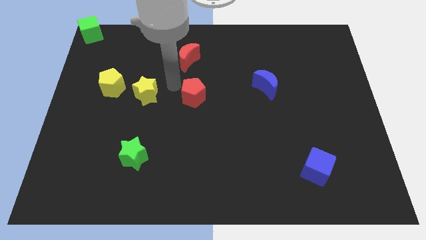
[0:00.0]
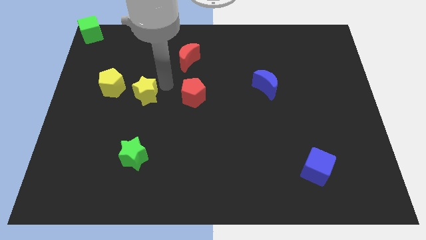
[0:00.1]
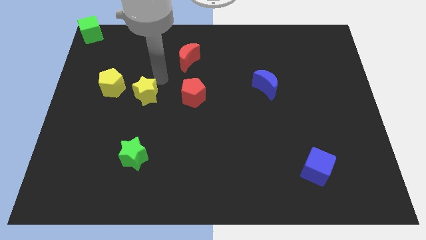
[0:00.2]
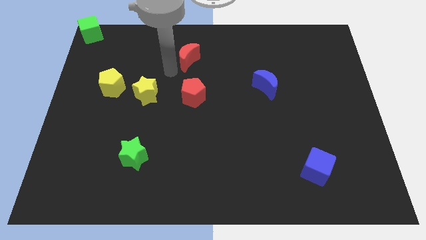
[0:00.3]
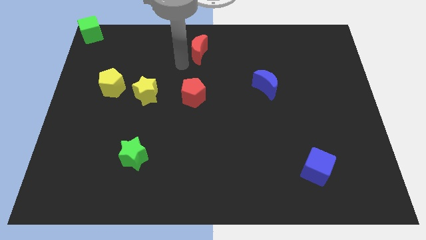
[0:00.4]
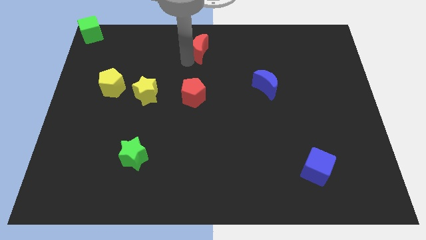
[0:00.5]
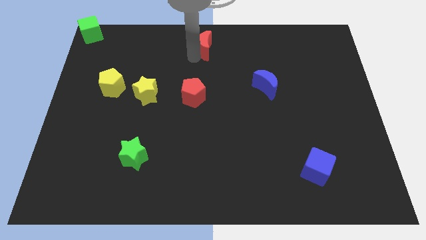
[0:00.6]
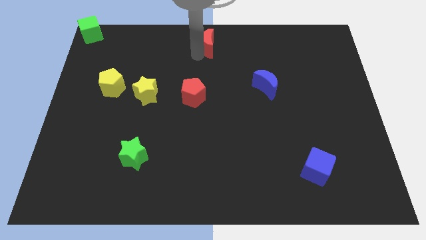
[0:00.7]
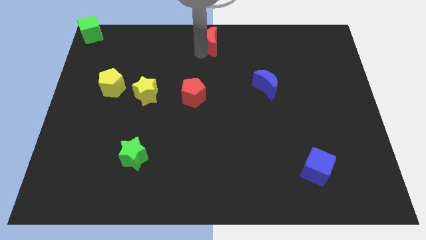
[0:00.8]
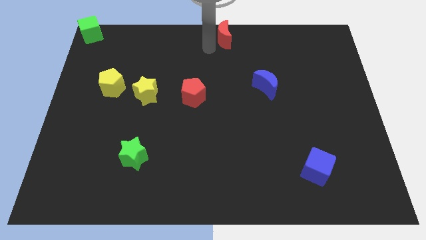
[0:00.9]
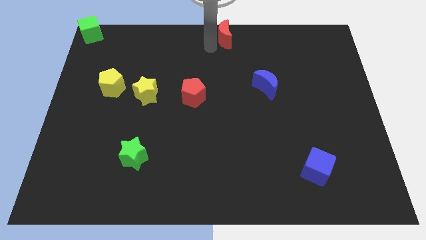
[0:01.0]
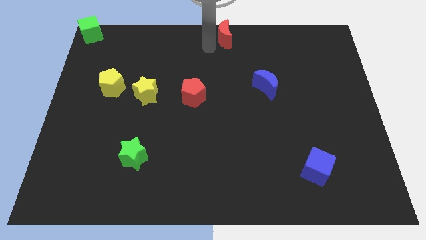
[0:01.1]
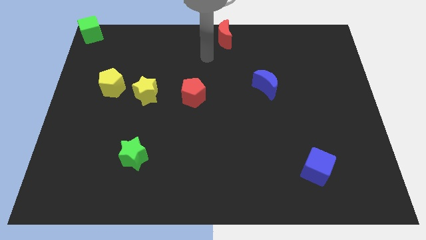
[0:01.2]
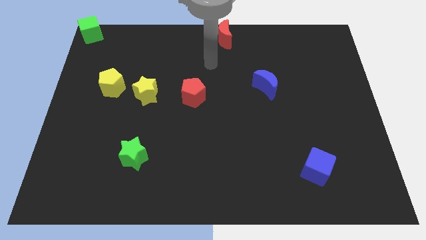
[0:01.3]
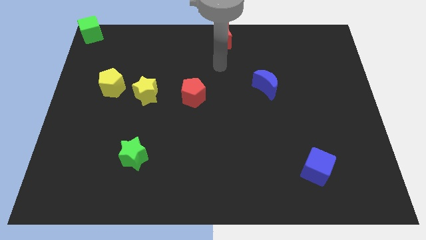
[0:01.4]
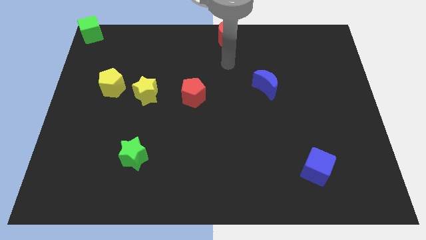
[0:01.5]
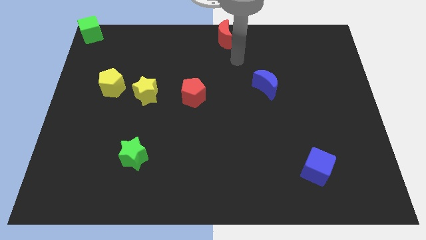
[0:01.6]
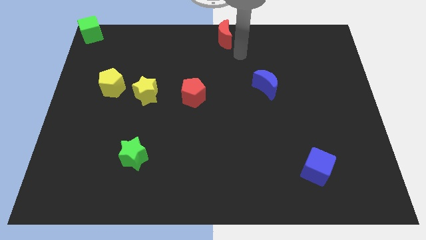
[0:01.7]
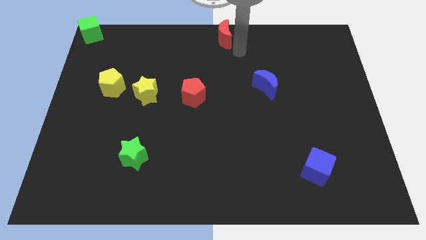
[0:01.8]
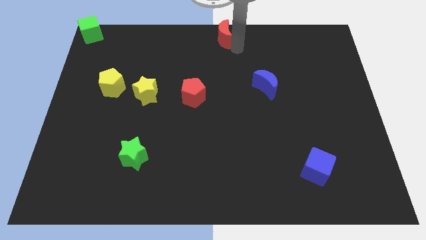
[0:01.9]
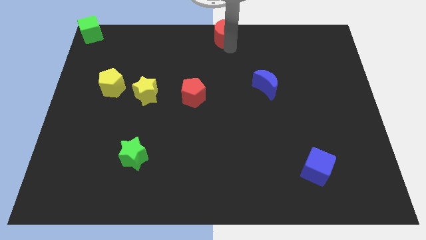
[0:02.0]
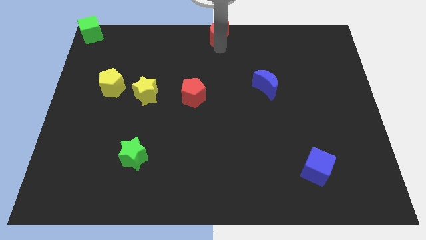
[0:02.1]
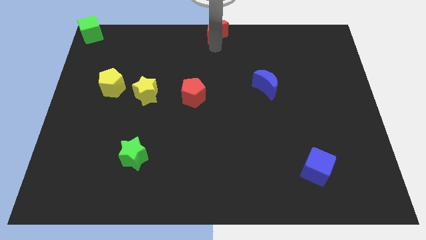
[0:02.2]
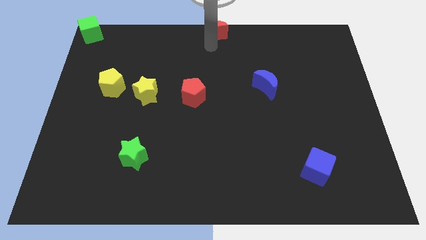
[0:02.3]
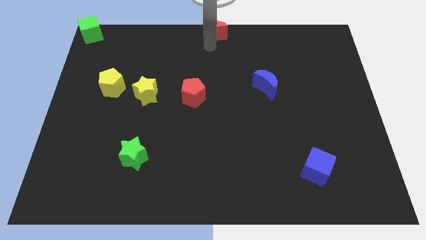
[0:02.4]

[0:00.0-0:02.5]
place the red moon at the top center of the board

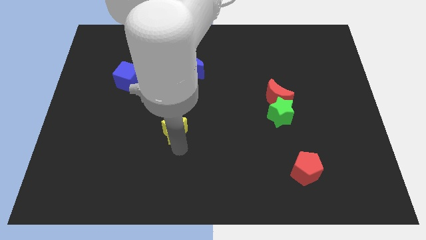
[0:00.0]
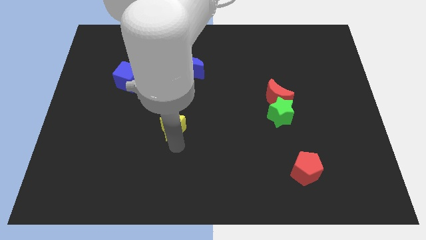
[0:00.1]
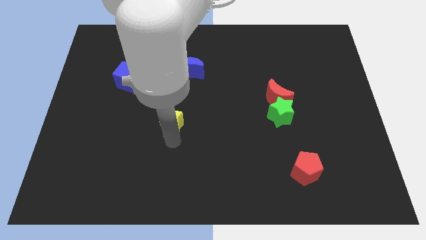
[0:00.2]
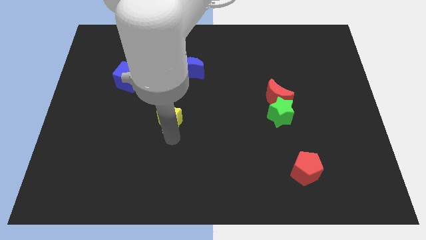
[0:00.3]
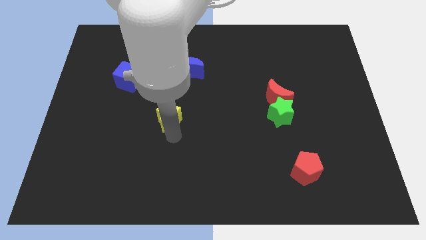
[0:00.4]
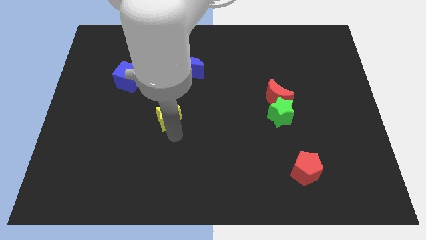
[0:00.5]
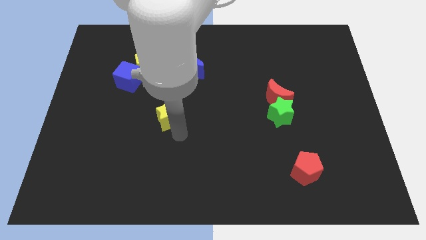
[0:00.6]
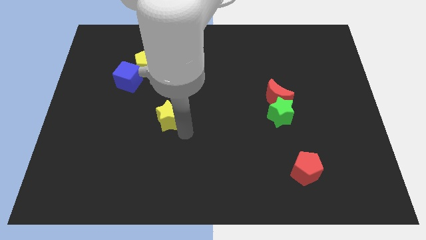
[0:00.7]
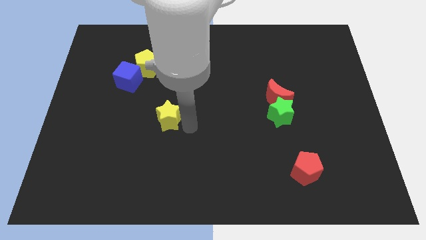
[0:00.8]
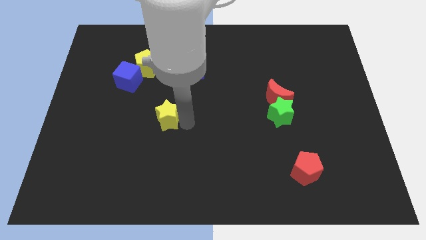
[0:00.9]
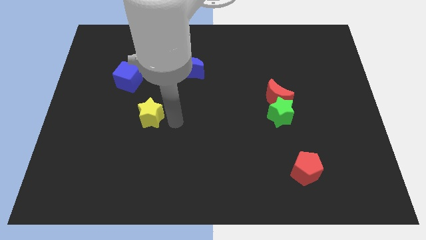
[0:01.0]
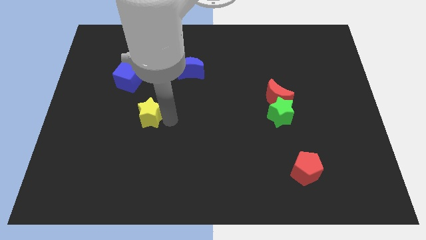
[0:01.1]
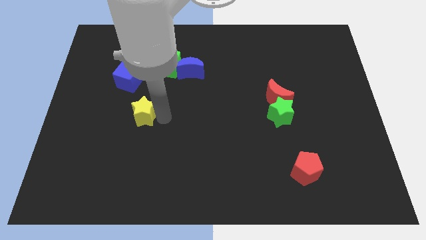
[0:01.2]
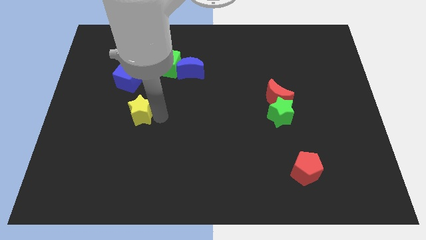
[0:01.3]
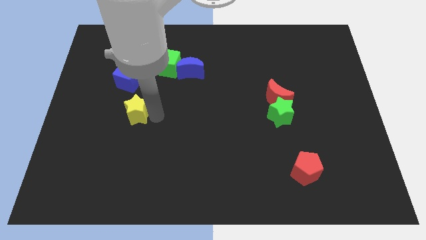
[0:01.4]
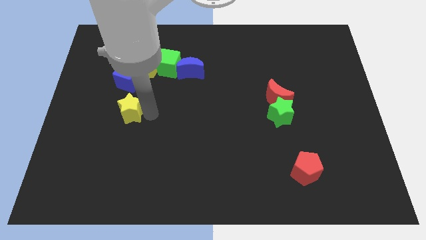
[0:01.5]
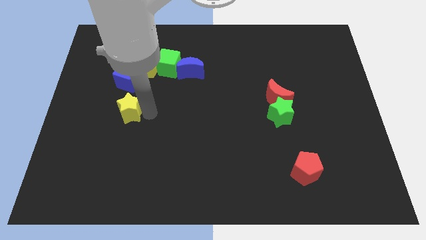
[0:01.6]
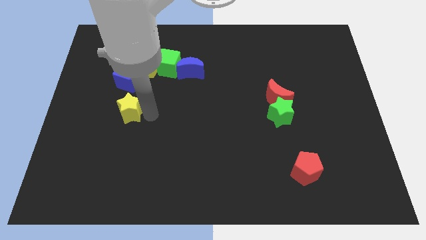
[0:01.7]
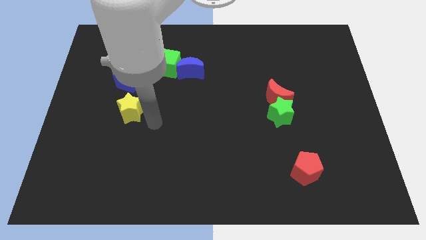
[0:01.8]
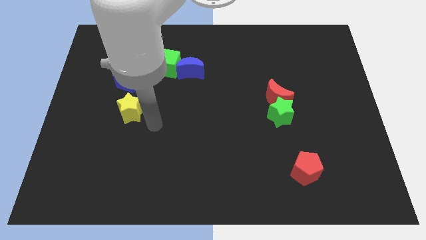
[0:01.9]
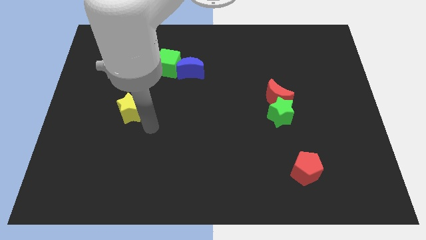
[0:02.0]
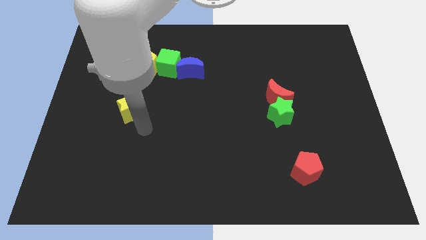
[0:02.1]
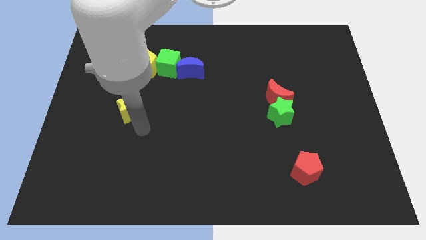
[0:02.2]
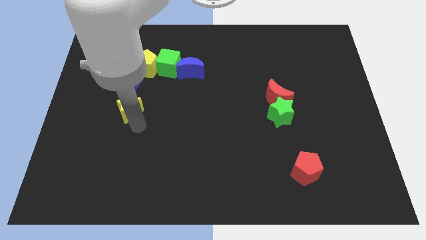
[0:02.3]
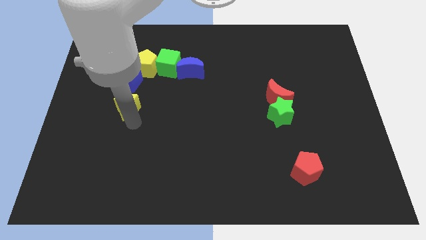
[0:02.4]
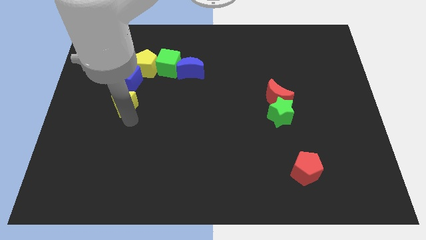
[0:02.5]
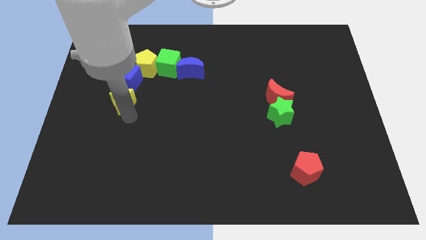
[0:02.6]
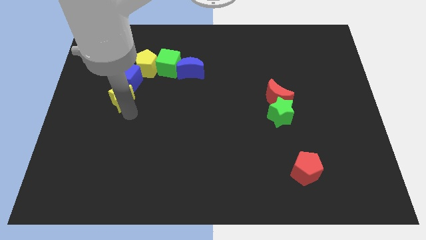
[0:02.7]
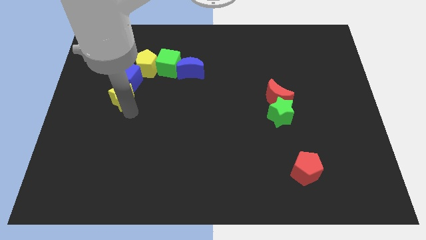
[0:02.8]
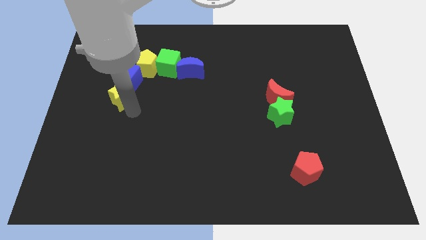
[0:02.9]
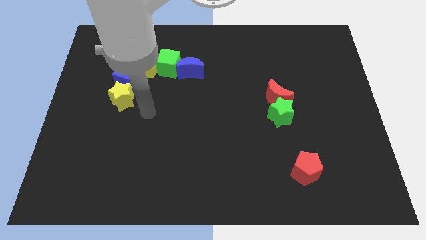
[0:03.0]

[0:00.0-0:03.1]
push the yellow star below the blue cube

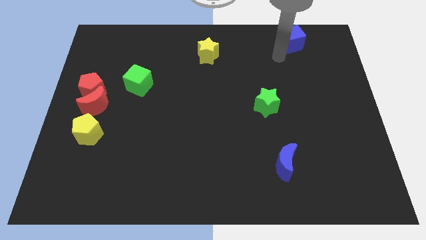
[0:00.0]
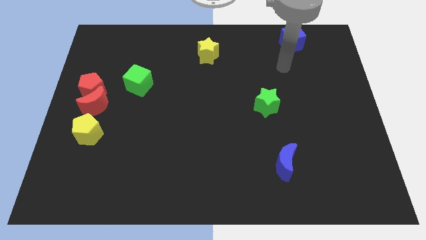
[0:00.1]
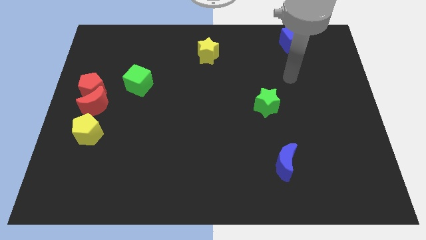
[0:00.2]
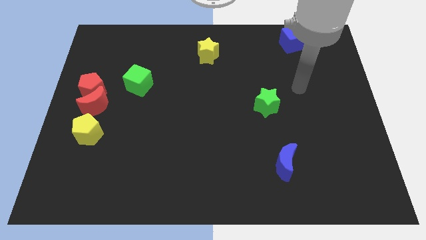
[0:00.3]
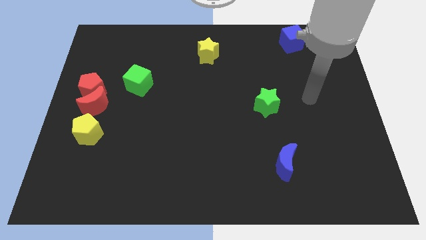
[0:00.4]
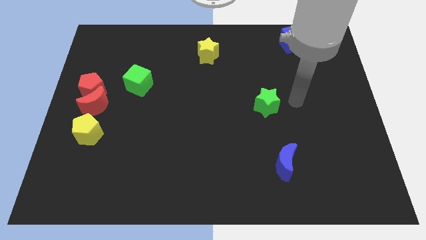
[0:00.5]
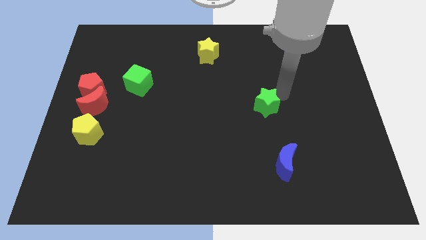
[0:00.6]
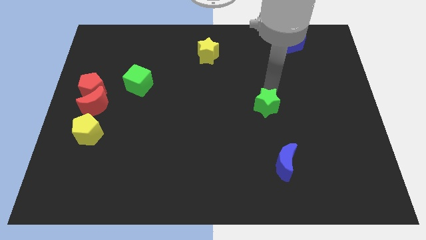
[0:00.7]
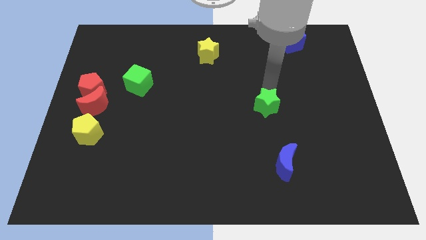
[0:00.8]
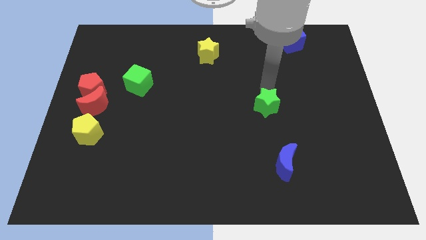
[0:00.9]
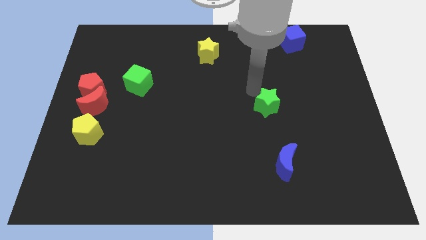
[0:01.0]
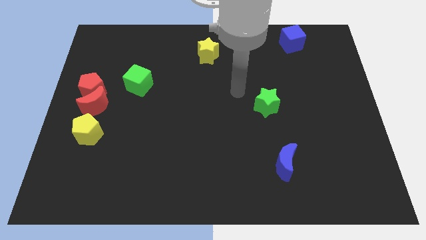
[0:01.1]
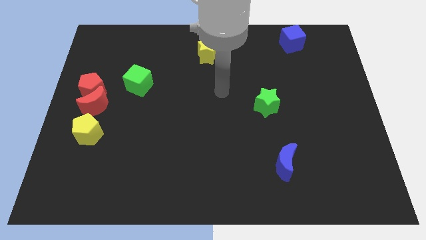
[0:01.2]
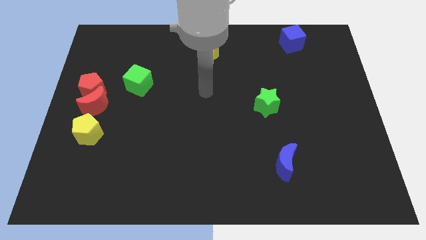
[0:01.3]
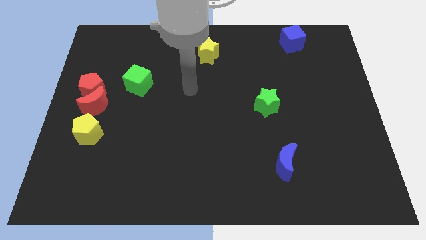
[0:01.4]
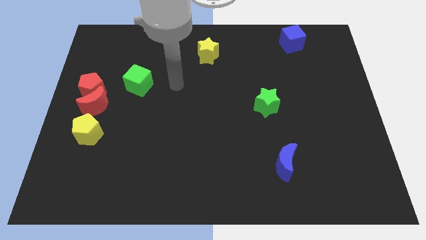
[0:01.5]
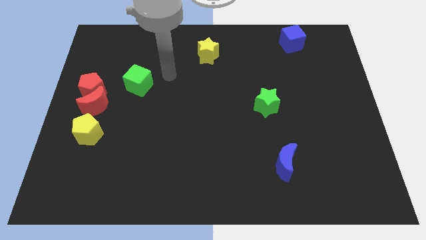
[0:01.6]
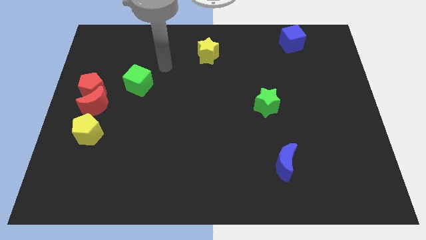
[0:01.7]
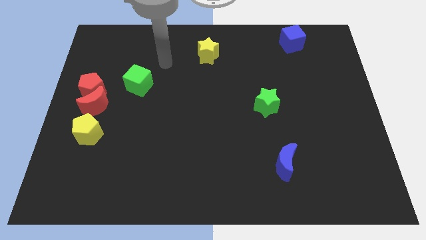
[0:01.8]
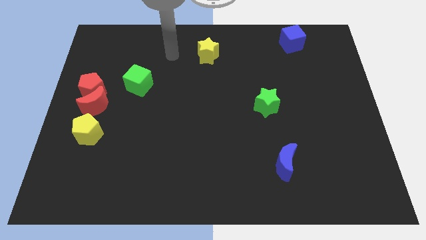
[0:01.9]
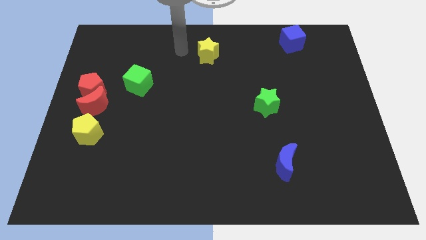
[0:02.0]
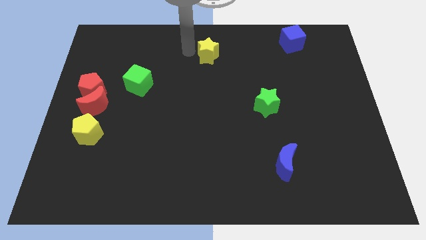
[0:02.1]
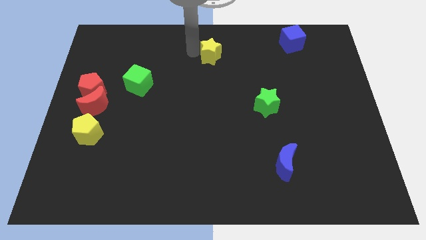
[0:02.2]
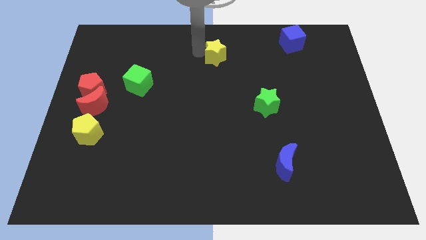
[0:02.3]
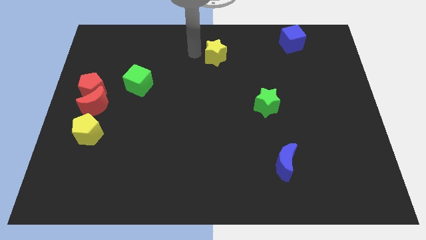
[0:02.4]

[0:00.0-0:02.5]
slide the yellow star towards right

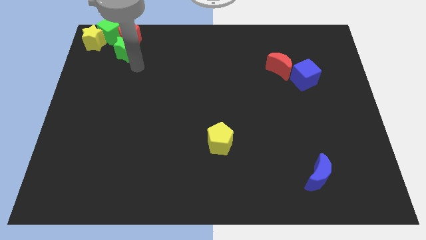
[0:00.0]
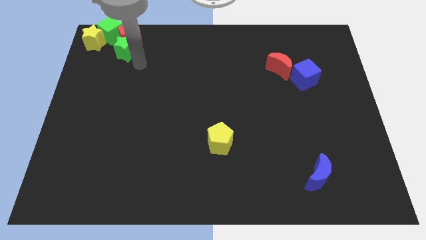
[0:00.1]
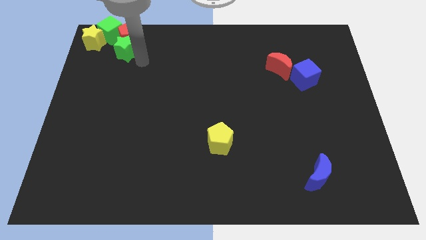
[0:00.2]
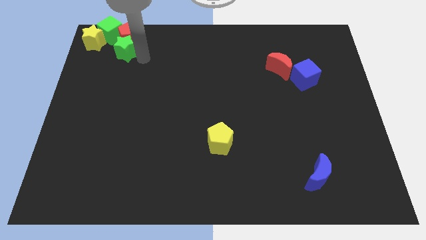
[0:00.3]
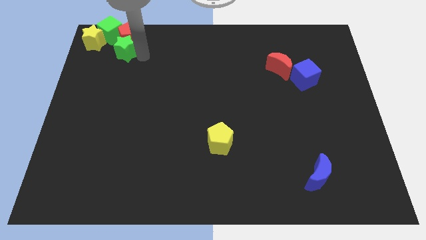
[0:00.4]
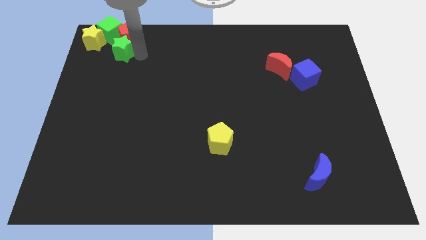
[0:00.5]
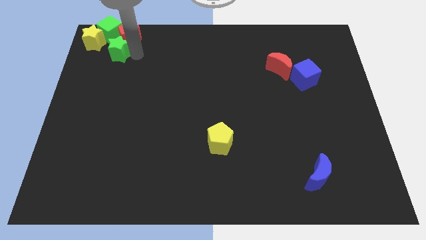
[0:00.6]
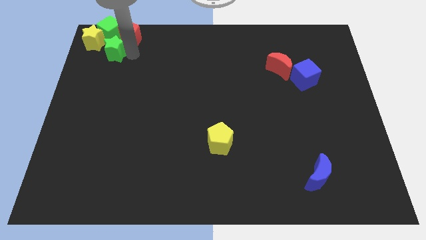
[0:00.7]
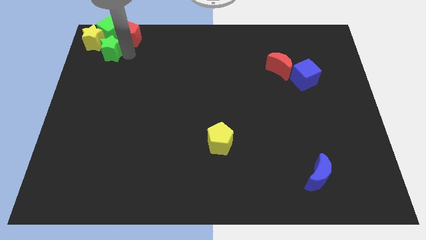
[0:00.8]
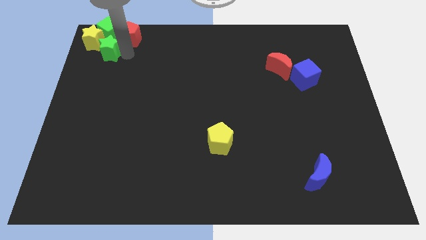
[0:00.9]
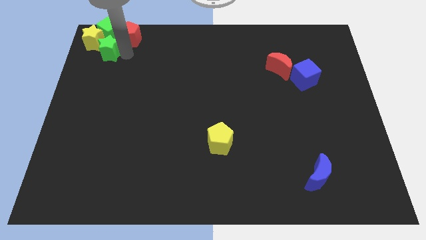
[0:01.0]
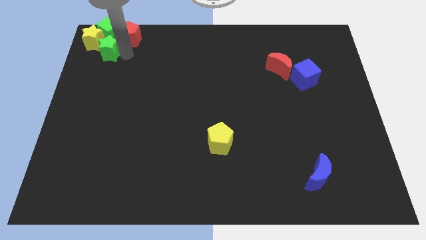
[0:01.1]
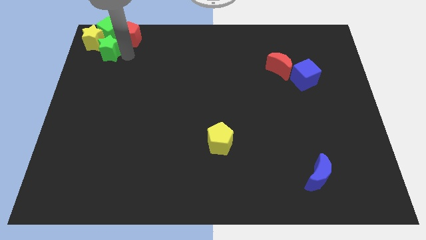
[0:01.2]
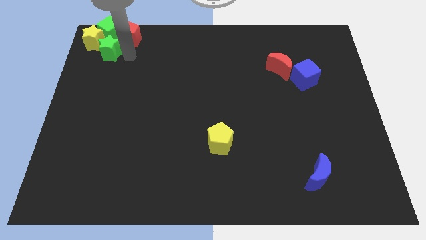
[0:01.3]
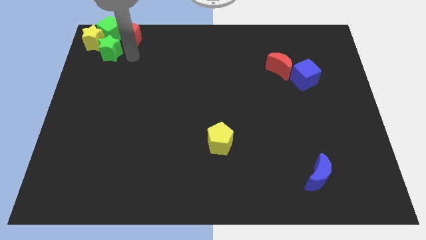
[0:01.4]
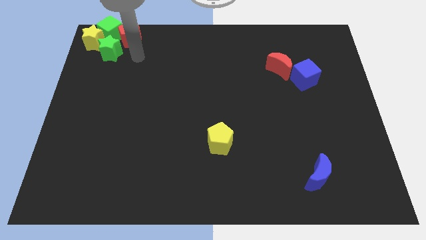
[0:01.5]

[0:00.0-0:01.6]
push the green star into yellow star
